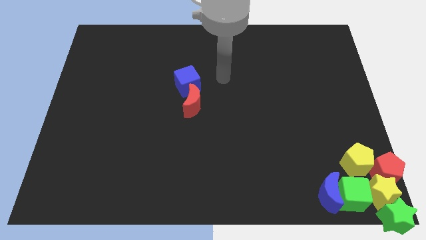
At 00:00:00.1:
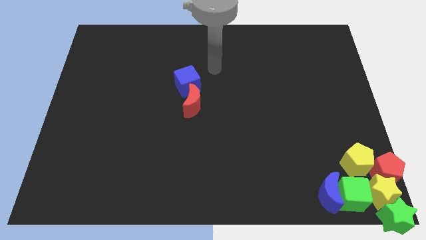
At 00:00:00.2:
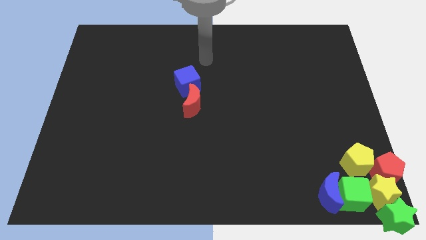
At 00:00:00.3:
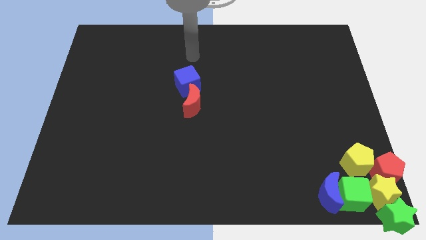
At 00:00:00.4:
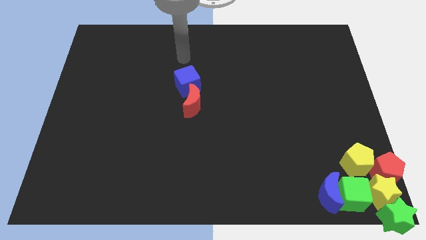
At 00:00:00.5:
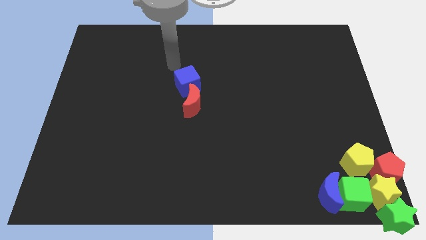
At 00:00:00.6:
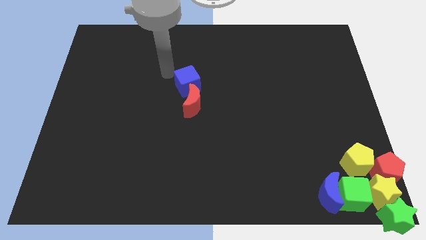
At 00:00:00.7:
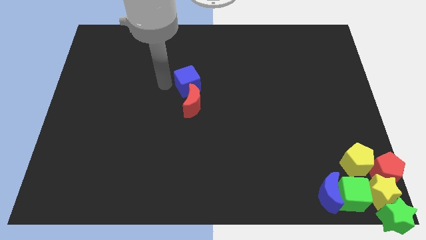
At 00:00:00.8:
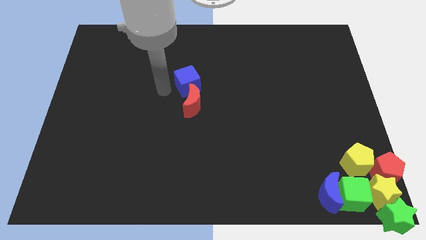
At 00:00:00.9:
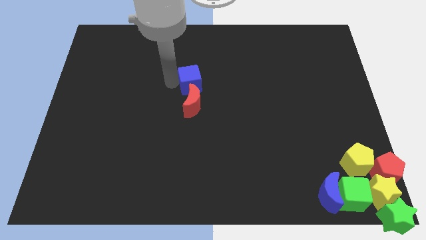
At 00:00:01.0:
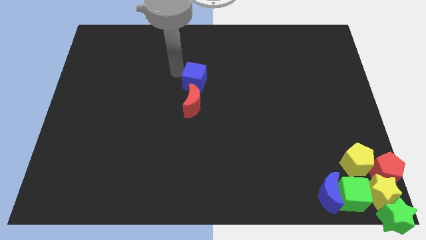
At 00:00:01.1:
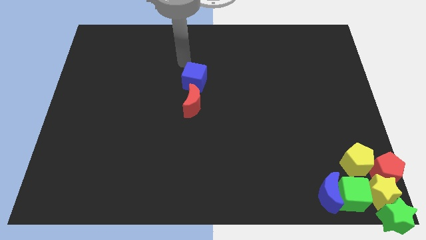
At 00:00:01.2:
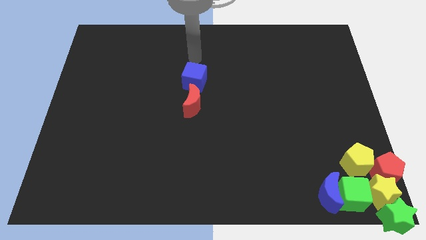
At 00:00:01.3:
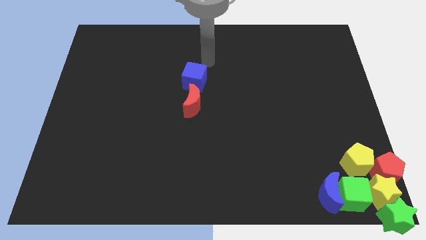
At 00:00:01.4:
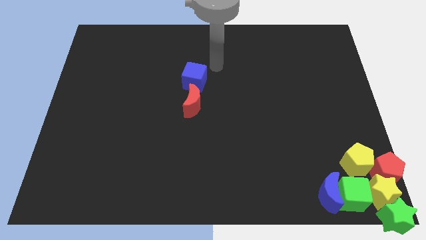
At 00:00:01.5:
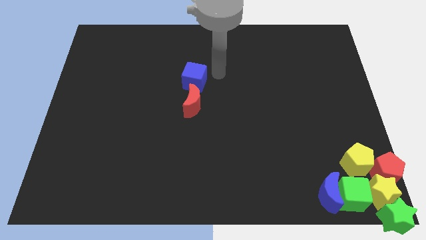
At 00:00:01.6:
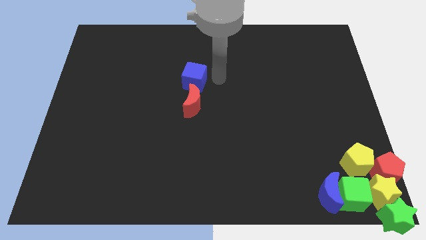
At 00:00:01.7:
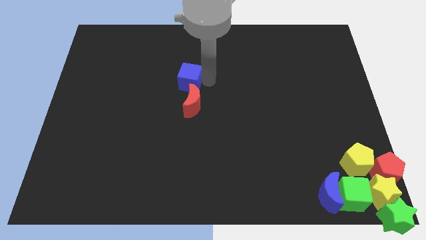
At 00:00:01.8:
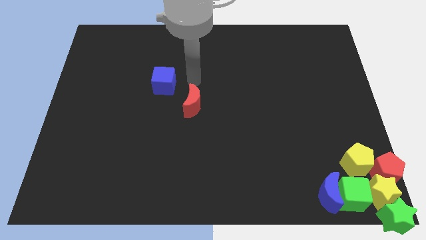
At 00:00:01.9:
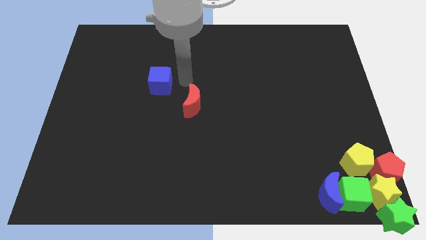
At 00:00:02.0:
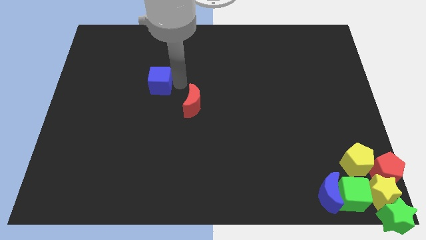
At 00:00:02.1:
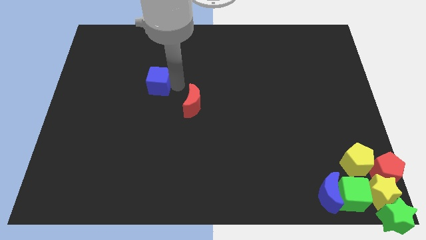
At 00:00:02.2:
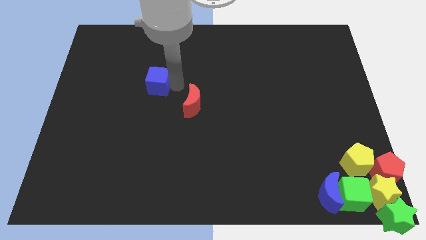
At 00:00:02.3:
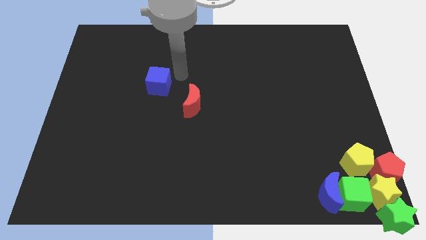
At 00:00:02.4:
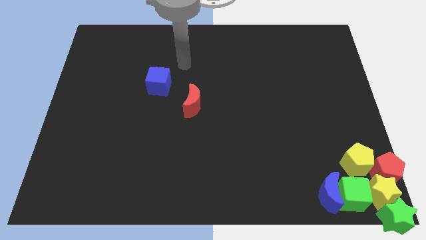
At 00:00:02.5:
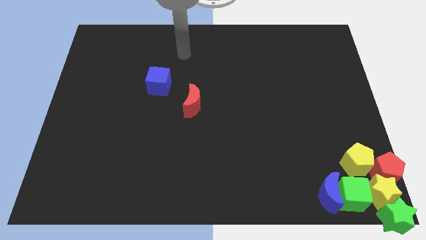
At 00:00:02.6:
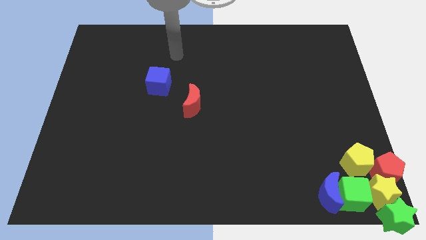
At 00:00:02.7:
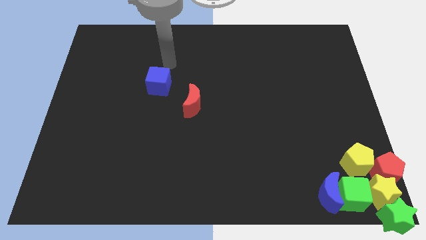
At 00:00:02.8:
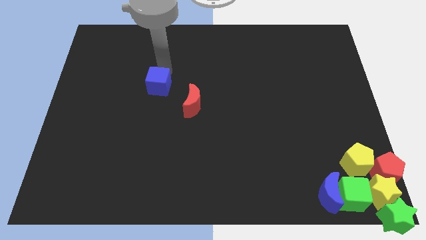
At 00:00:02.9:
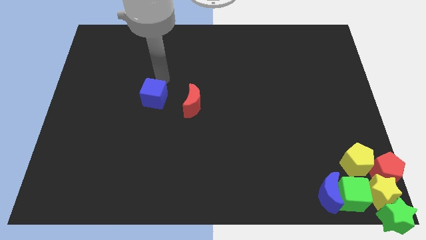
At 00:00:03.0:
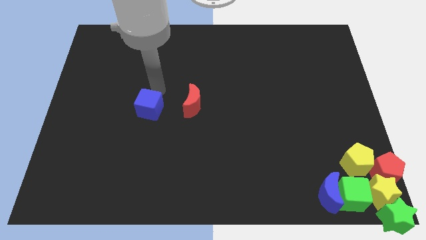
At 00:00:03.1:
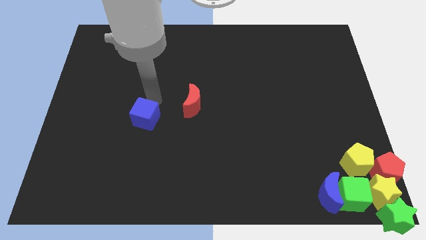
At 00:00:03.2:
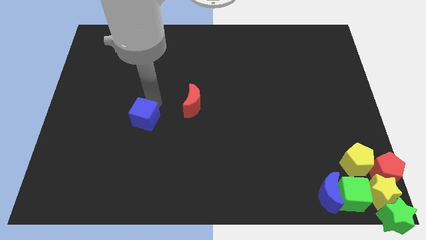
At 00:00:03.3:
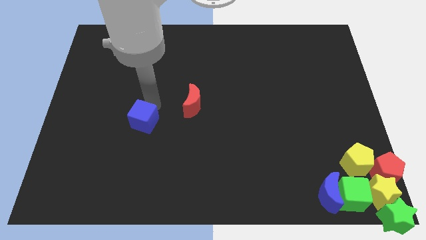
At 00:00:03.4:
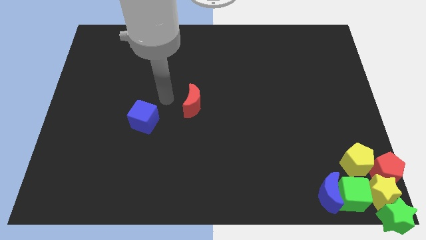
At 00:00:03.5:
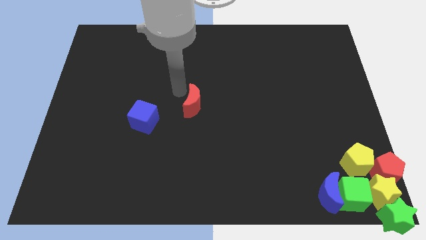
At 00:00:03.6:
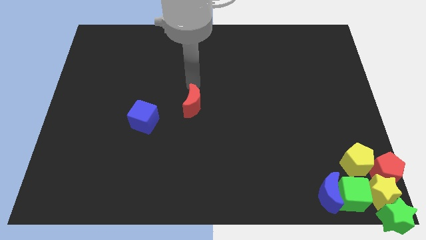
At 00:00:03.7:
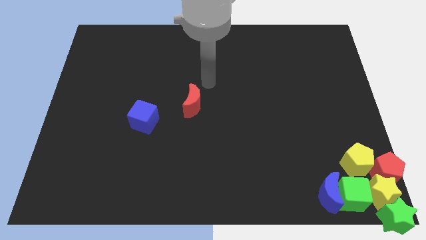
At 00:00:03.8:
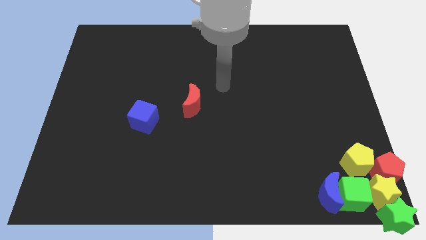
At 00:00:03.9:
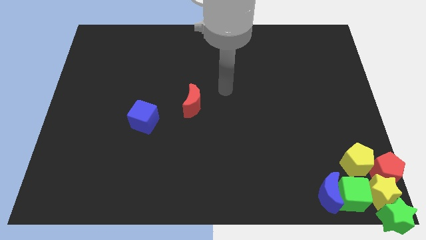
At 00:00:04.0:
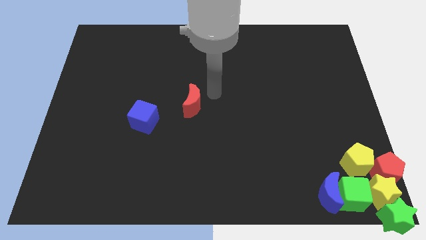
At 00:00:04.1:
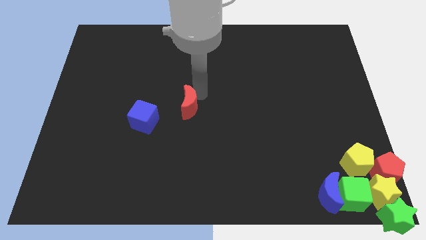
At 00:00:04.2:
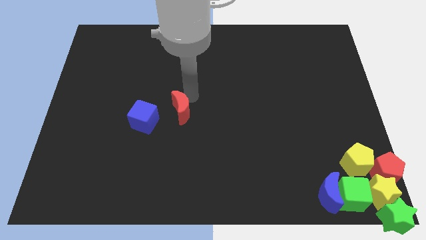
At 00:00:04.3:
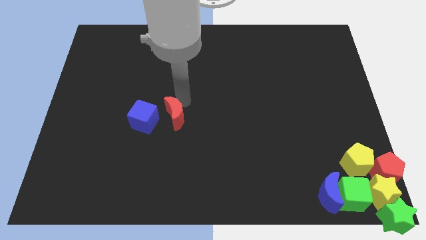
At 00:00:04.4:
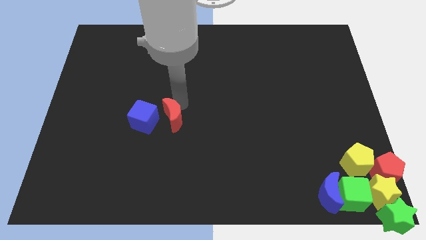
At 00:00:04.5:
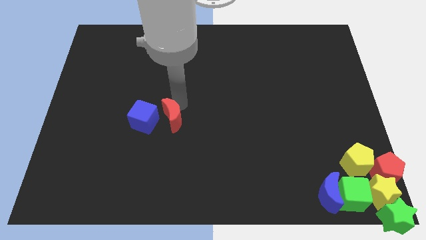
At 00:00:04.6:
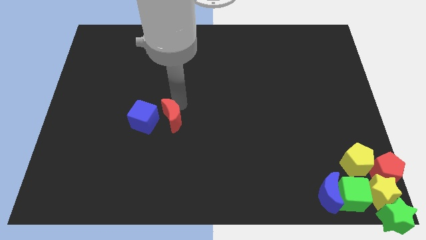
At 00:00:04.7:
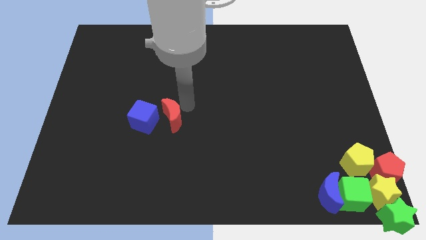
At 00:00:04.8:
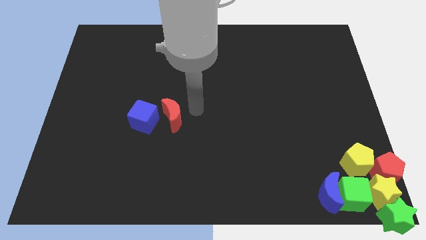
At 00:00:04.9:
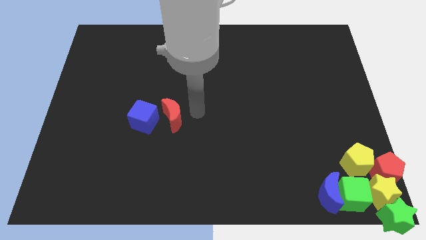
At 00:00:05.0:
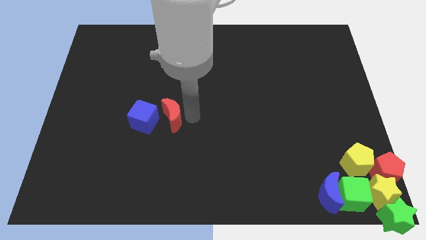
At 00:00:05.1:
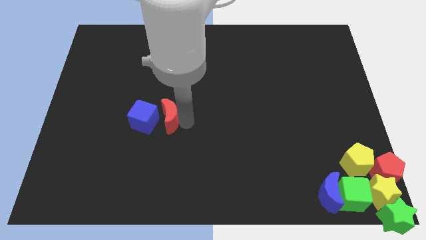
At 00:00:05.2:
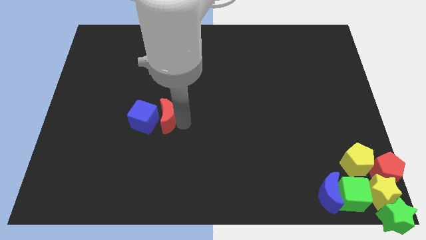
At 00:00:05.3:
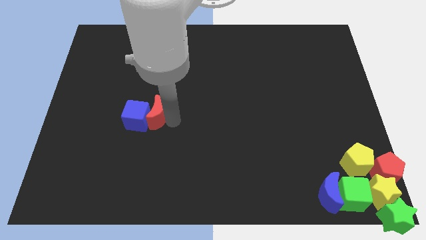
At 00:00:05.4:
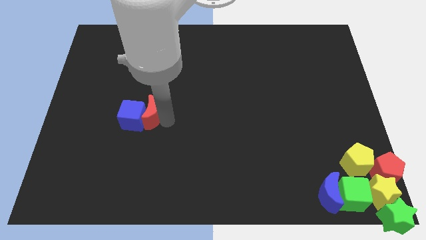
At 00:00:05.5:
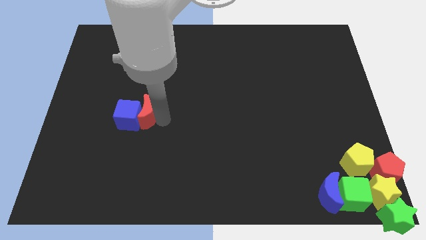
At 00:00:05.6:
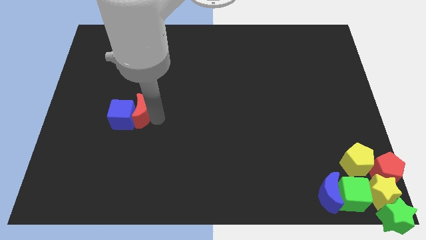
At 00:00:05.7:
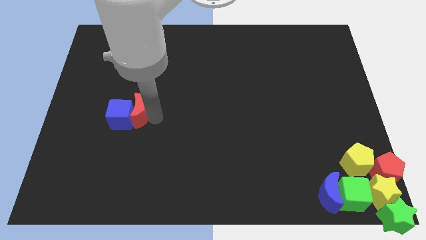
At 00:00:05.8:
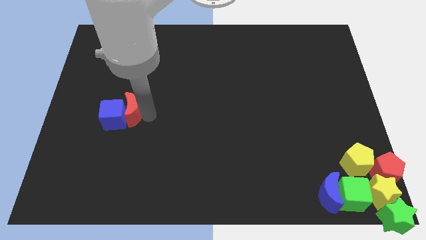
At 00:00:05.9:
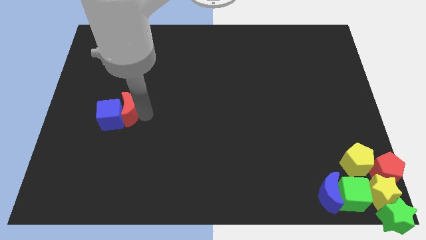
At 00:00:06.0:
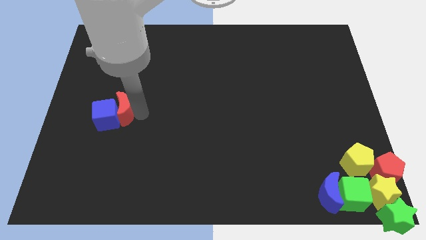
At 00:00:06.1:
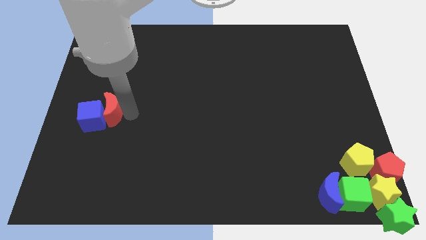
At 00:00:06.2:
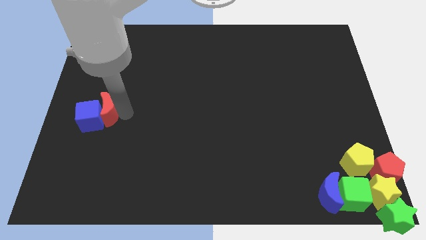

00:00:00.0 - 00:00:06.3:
push the blue cube and the red crescent to the left center of the board

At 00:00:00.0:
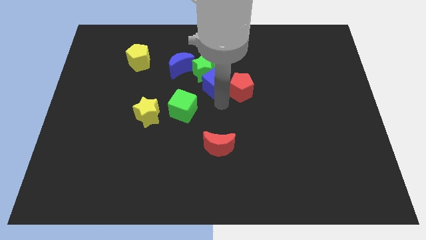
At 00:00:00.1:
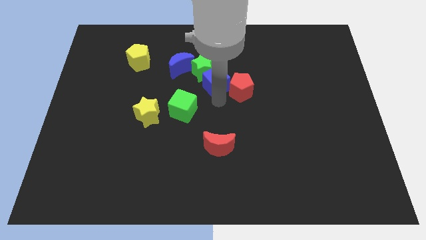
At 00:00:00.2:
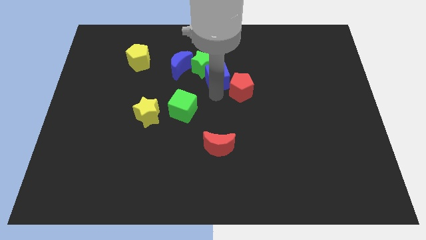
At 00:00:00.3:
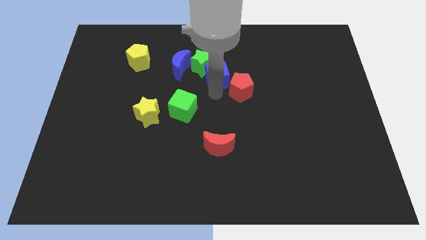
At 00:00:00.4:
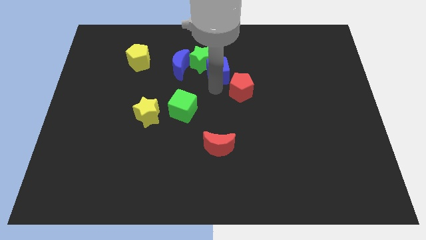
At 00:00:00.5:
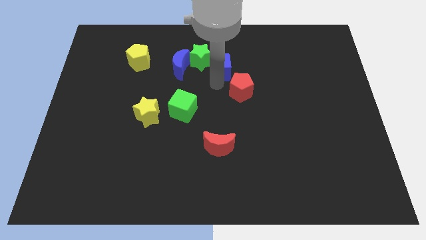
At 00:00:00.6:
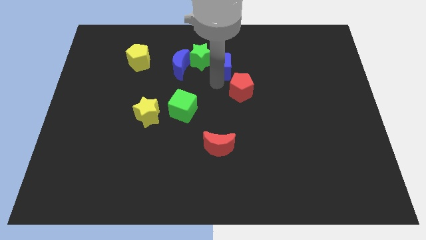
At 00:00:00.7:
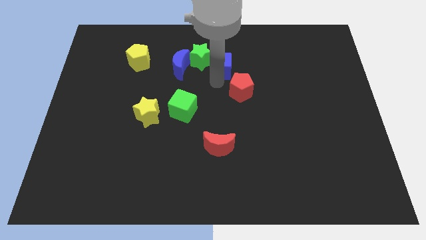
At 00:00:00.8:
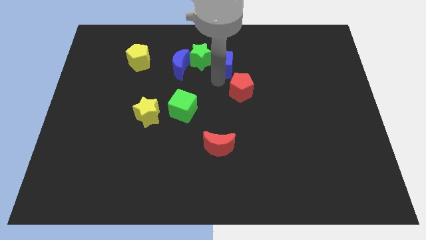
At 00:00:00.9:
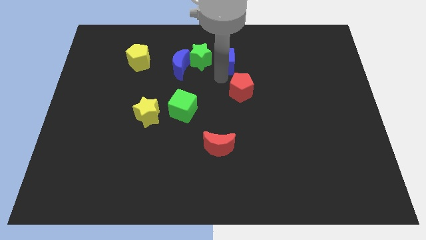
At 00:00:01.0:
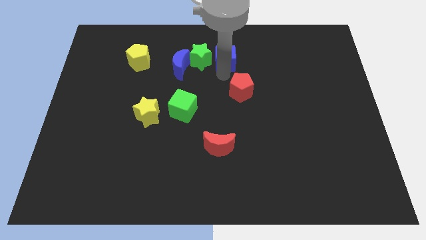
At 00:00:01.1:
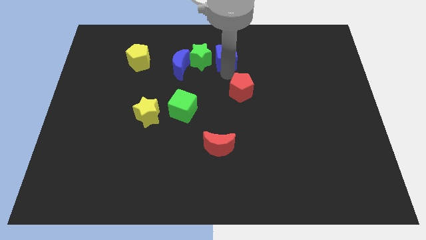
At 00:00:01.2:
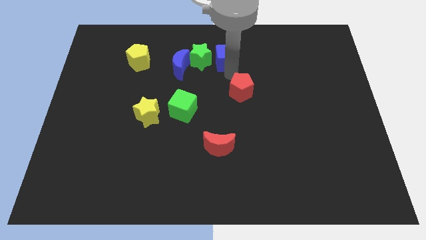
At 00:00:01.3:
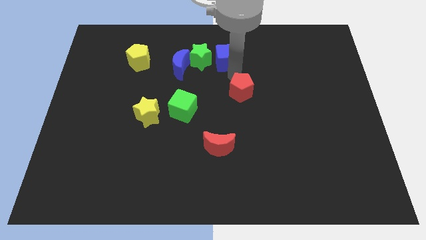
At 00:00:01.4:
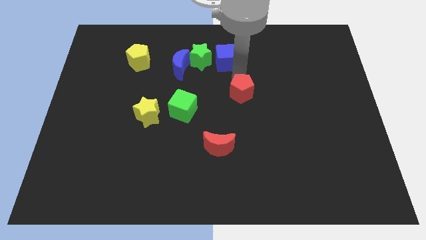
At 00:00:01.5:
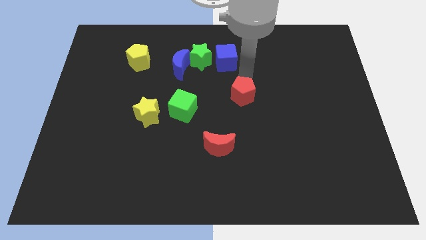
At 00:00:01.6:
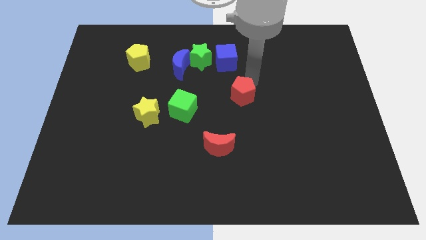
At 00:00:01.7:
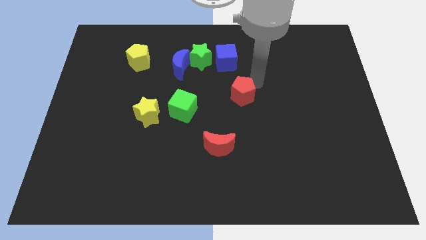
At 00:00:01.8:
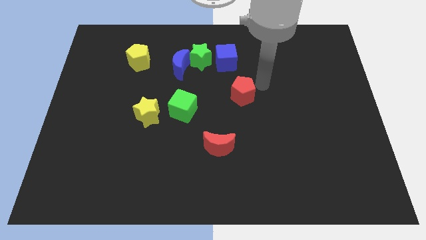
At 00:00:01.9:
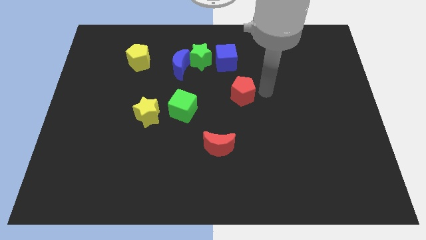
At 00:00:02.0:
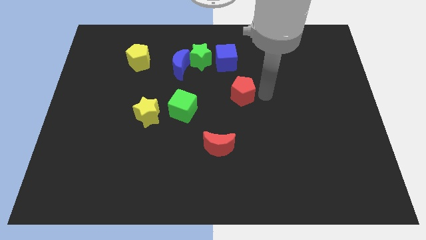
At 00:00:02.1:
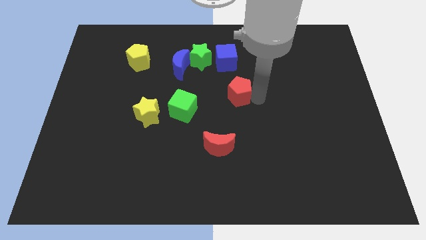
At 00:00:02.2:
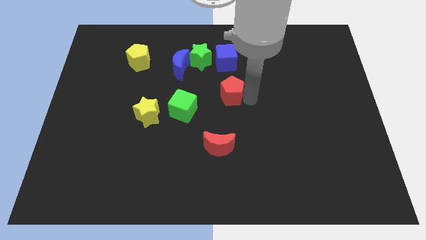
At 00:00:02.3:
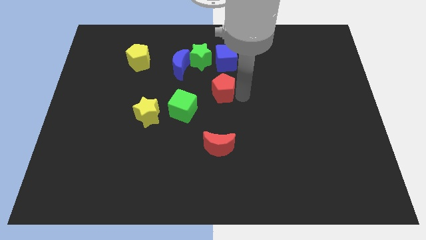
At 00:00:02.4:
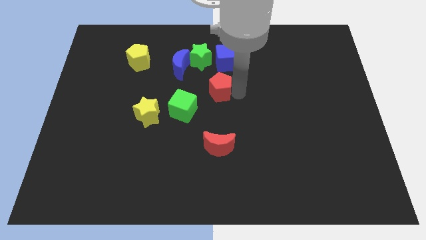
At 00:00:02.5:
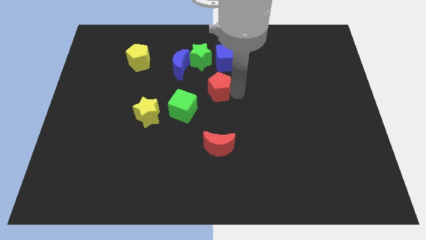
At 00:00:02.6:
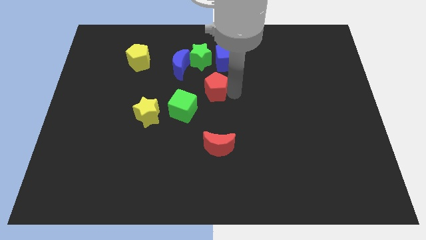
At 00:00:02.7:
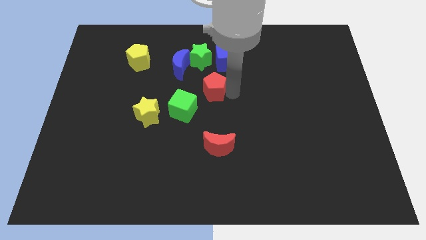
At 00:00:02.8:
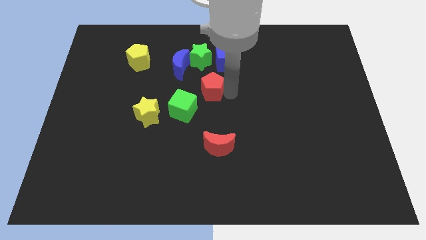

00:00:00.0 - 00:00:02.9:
push blue cube upwards beside green star
